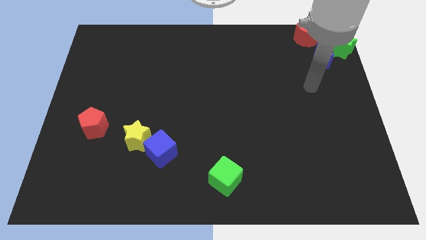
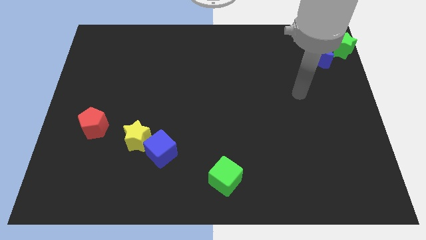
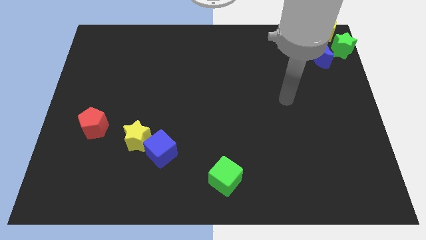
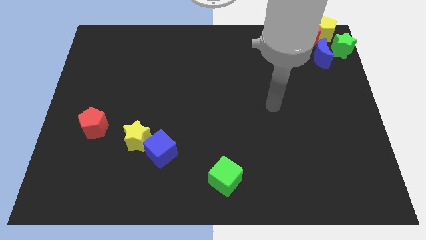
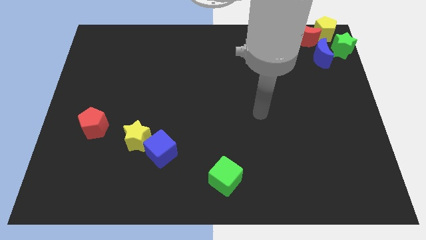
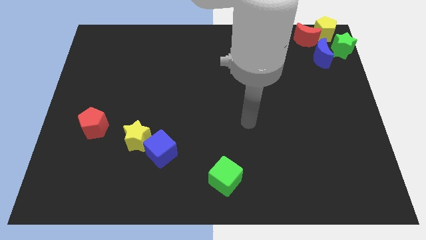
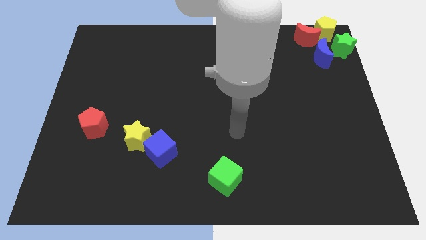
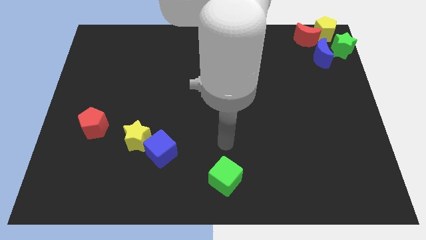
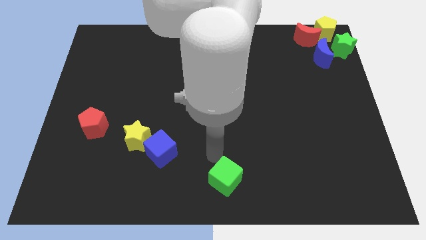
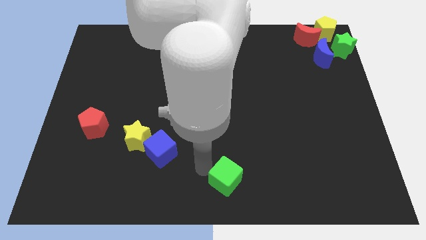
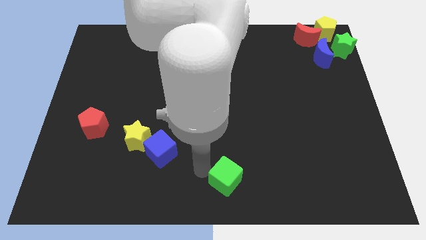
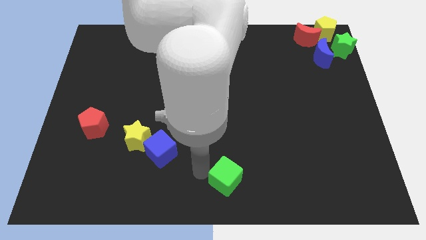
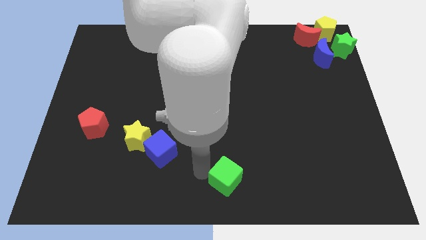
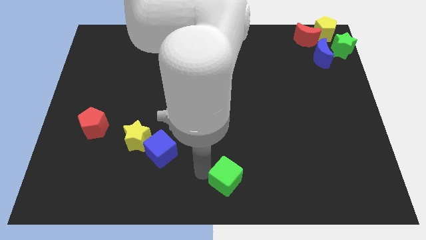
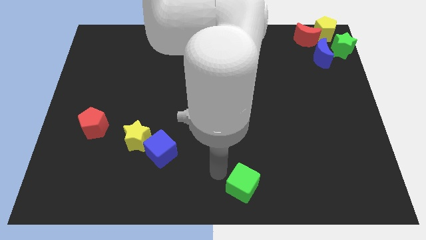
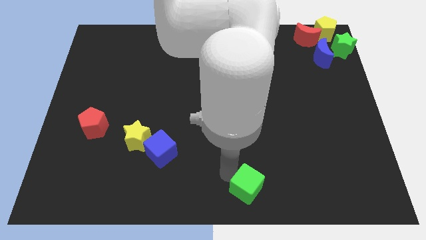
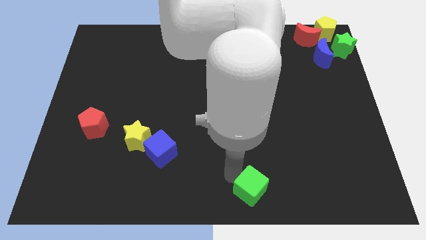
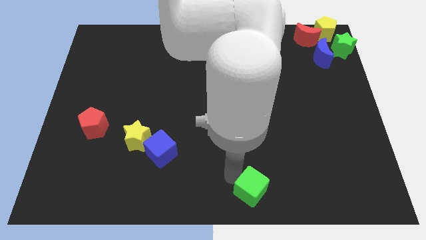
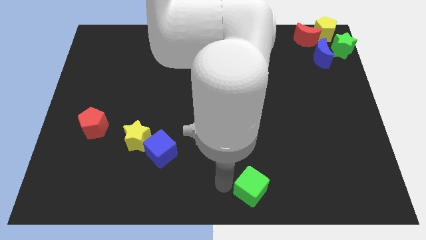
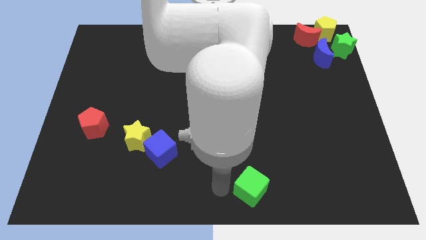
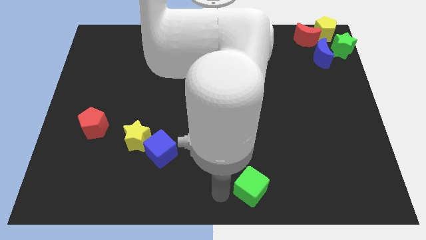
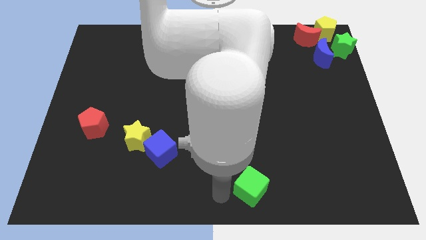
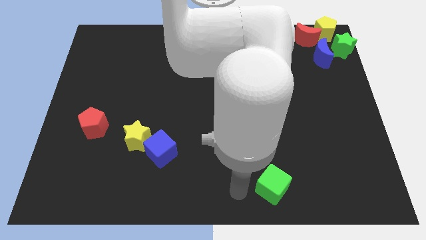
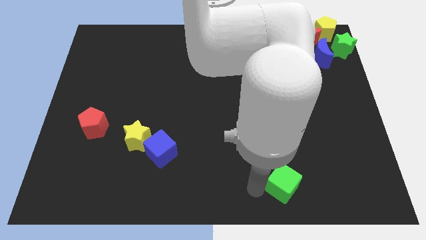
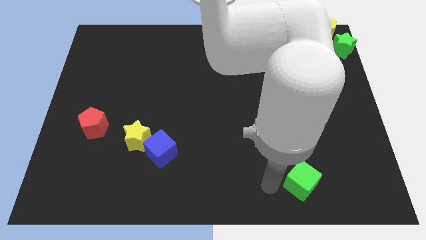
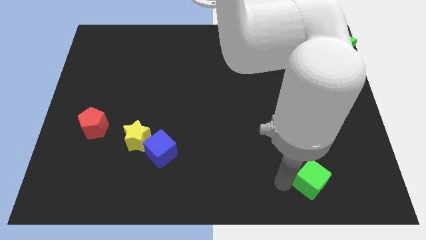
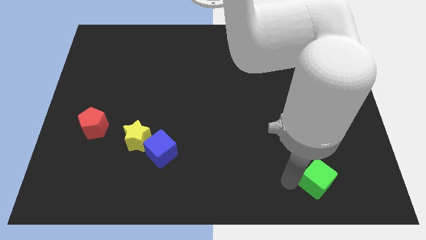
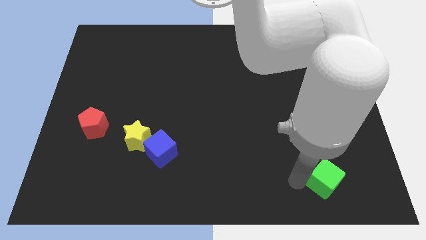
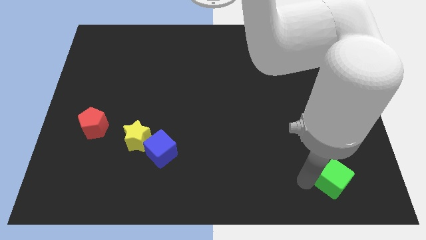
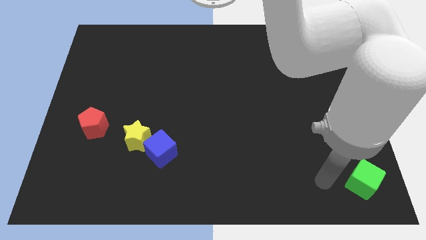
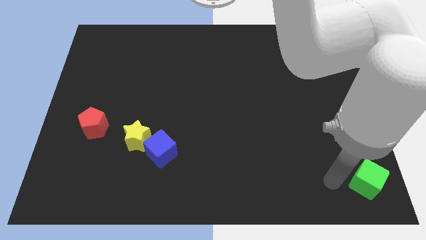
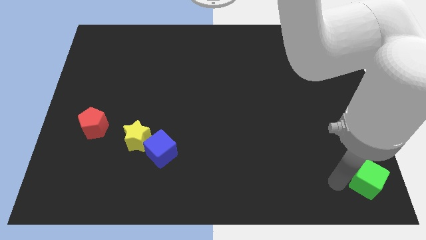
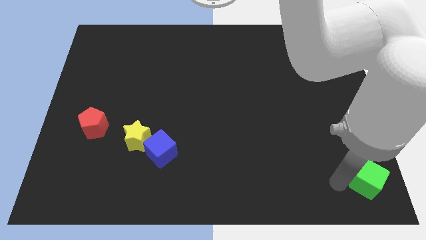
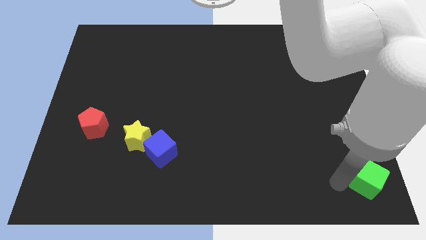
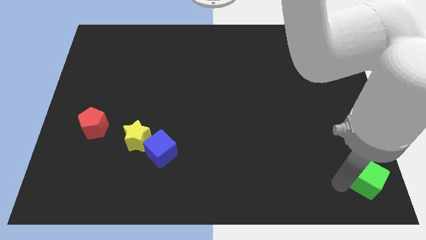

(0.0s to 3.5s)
slide the green cube to the bottom right corner

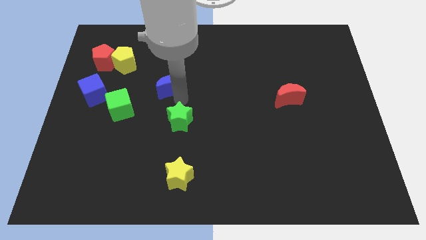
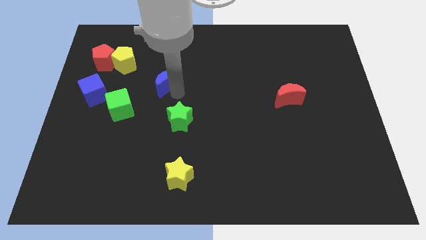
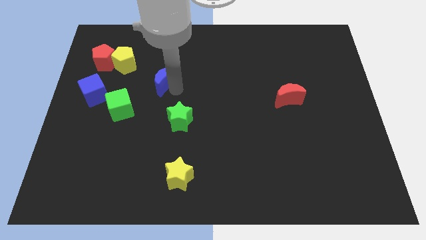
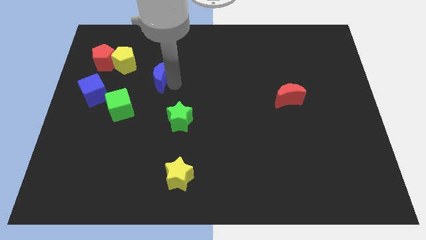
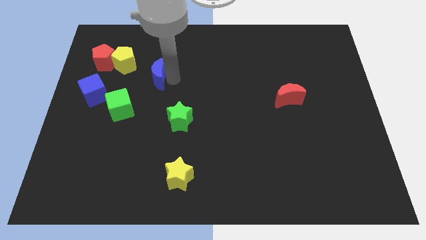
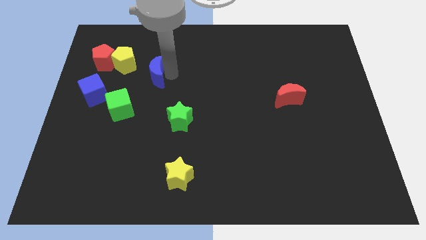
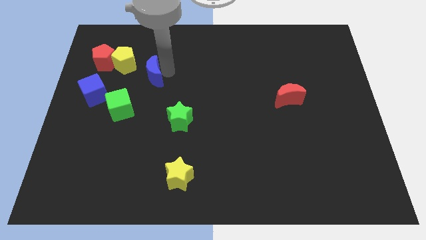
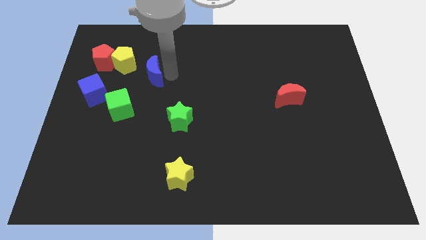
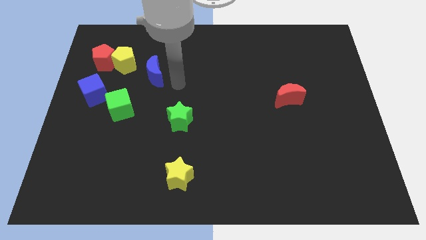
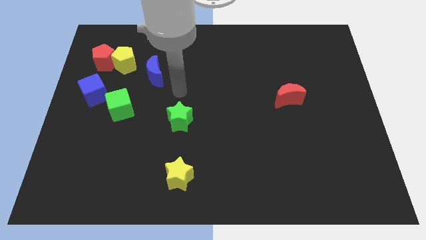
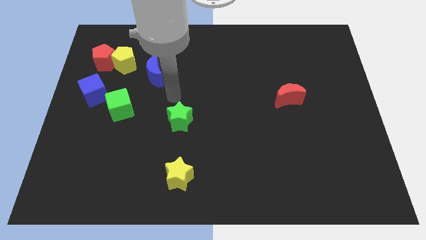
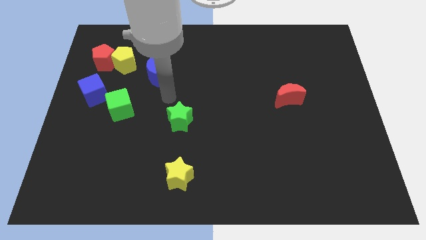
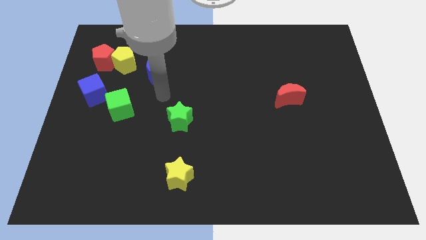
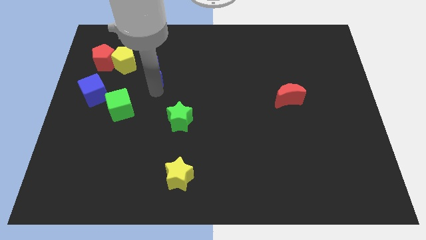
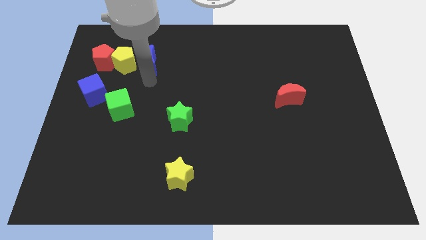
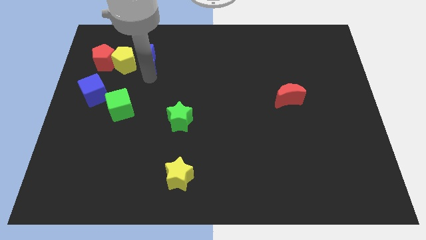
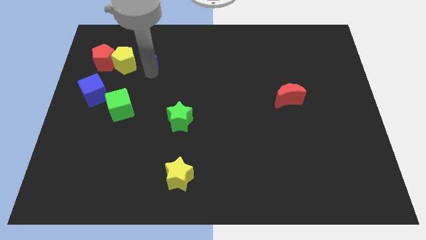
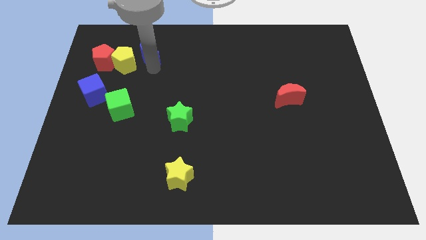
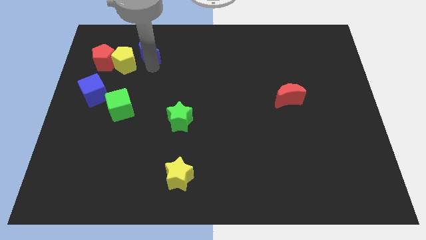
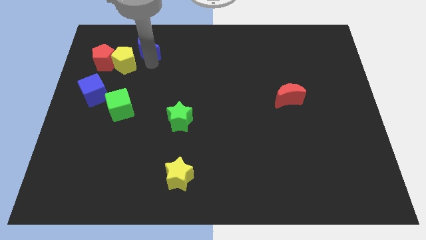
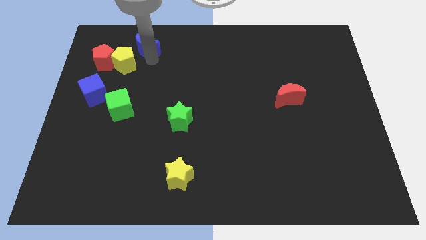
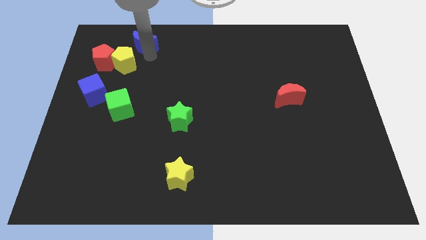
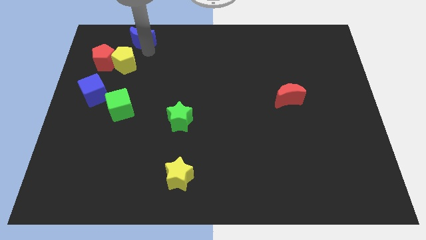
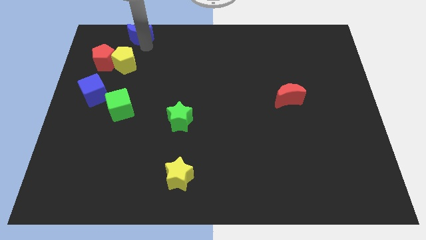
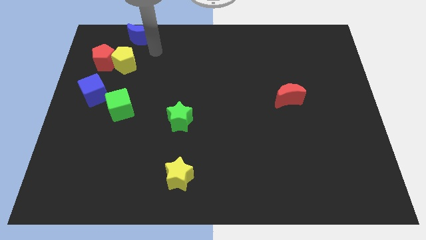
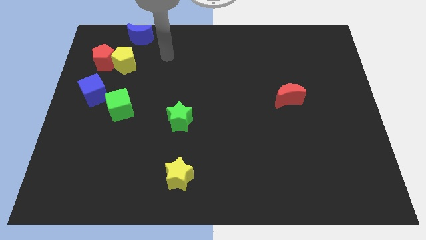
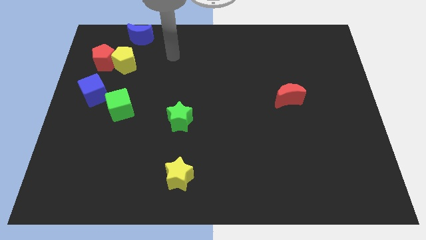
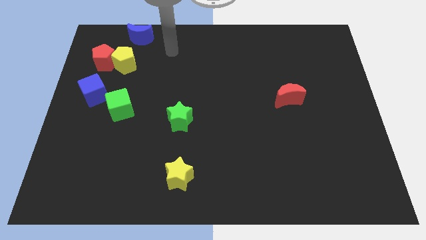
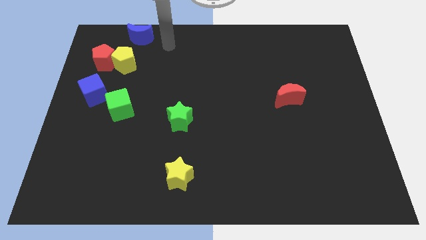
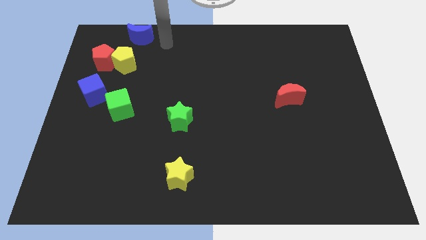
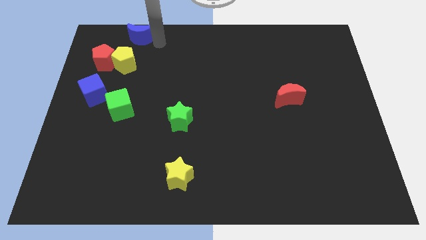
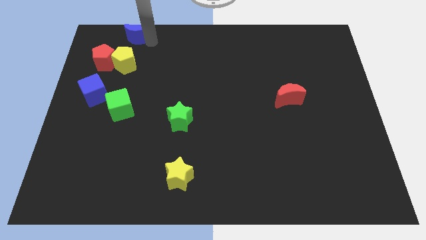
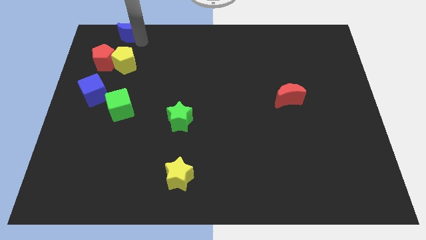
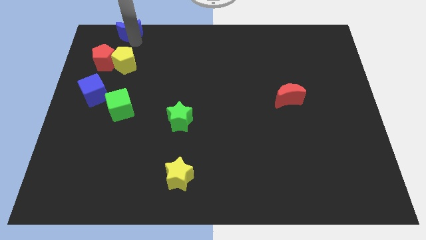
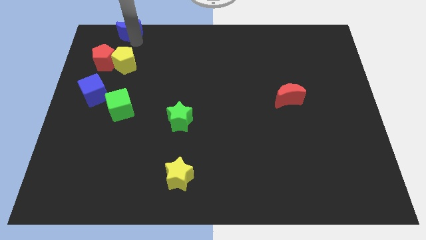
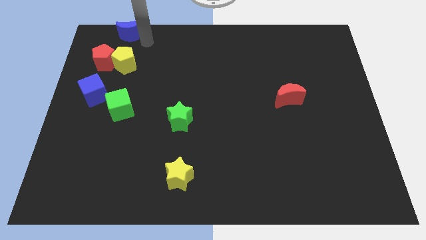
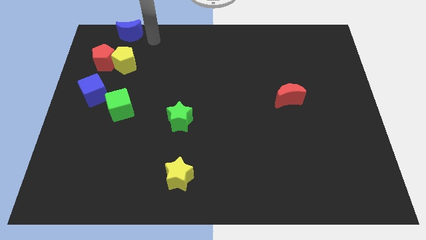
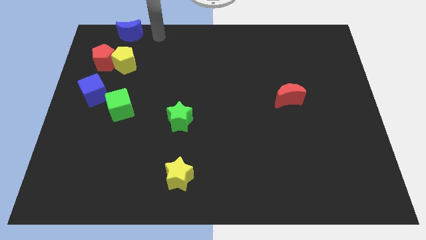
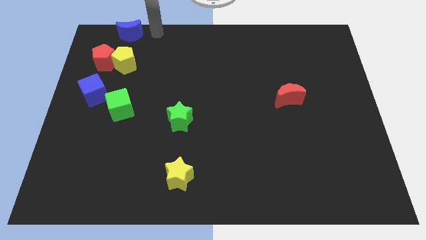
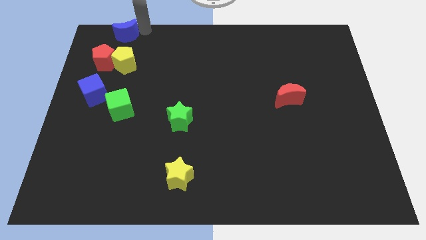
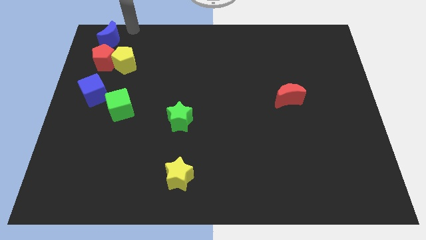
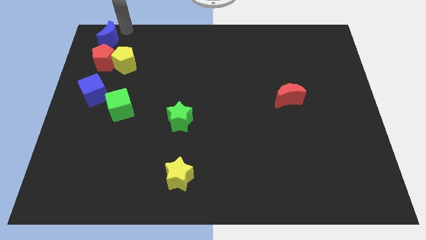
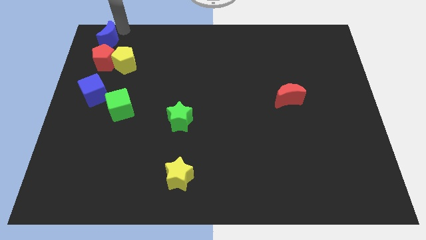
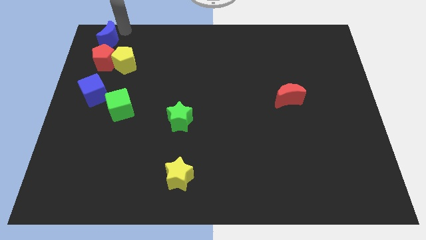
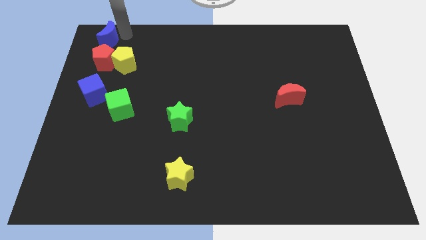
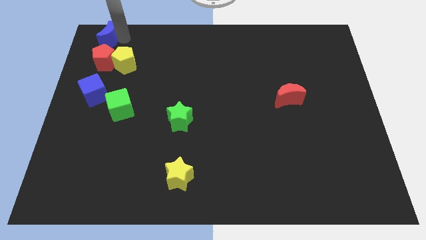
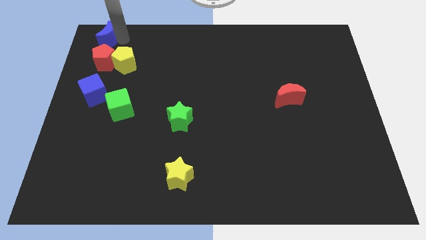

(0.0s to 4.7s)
place the blue moon above the red pentagon

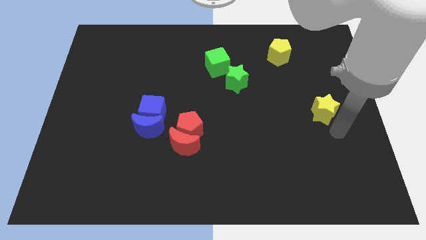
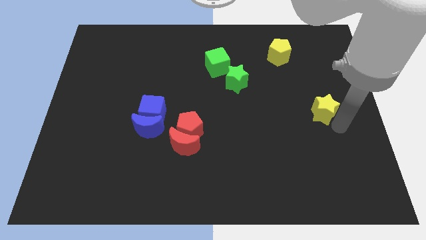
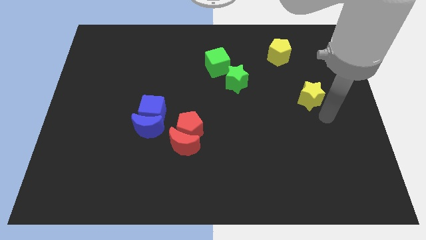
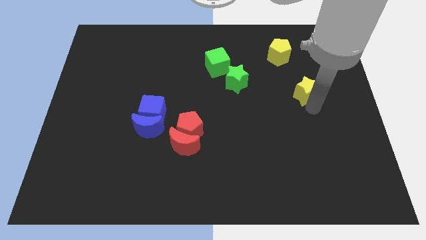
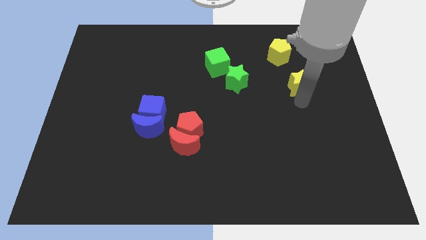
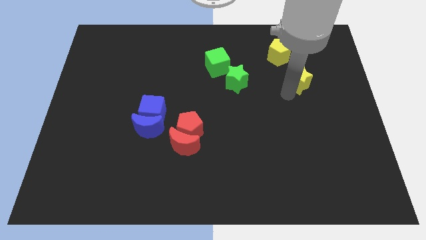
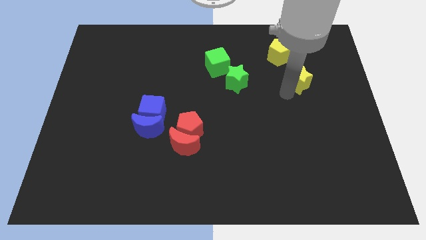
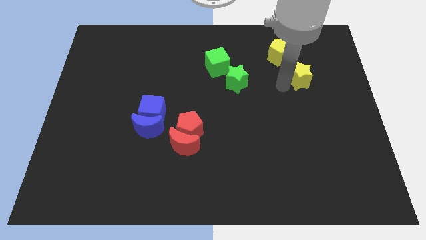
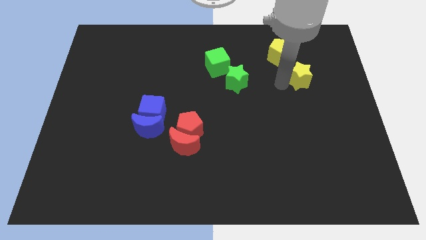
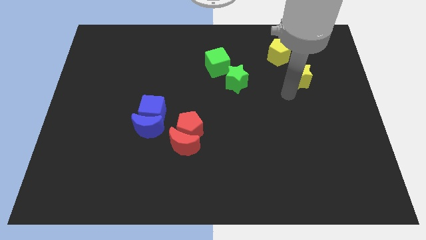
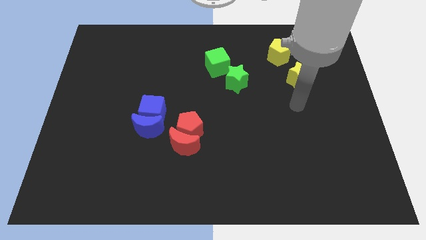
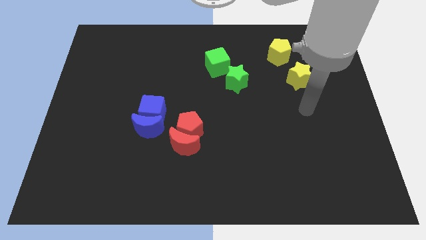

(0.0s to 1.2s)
move yellow star diagonal to yellow pentagon
